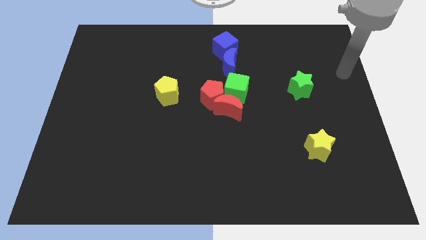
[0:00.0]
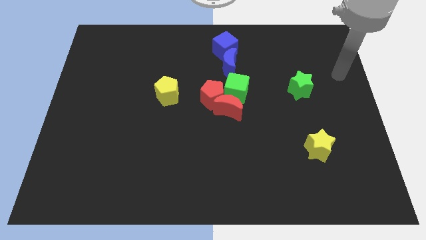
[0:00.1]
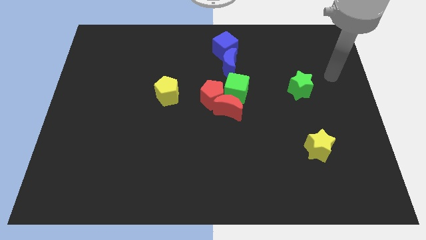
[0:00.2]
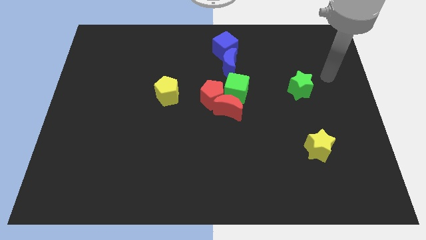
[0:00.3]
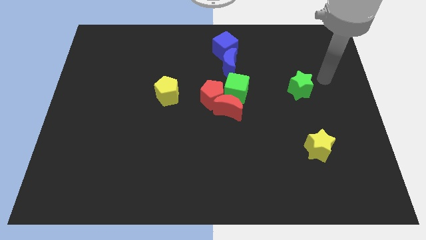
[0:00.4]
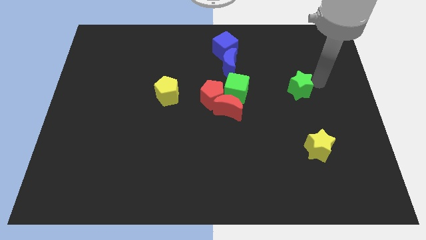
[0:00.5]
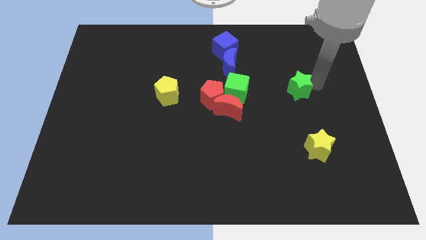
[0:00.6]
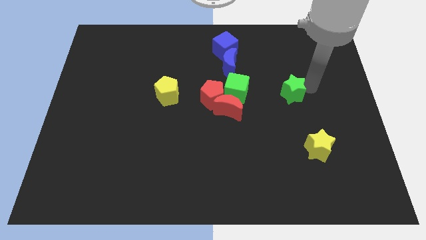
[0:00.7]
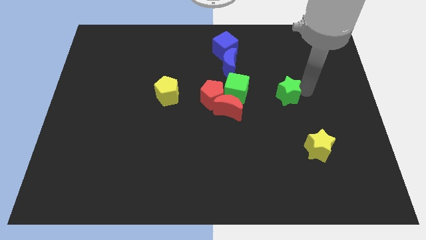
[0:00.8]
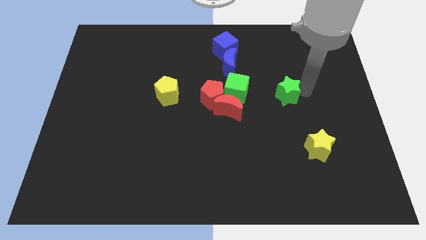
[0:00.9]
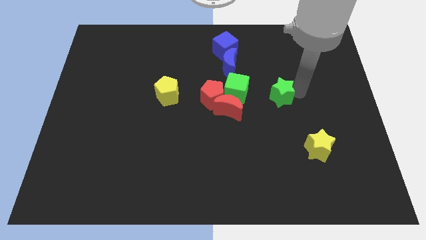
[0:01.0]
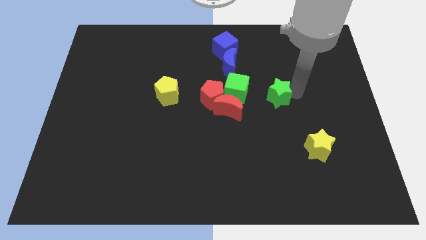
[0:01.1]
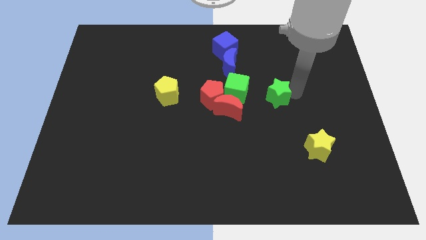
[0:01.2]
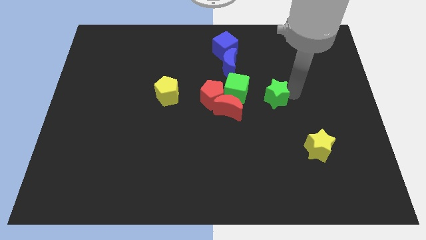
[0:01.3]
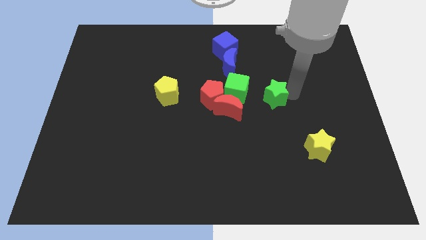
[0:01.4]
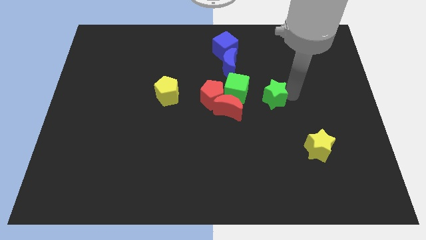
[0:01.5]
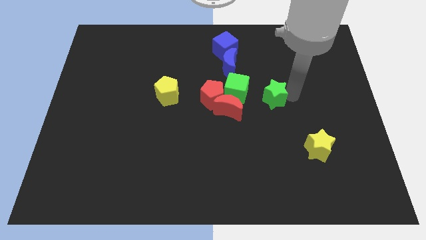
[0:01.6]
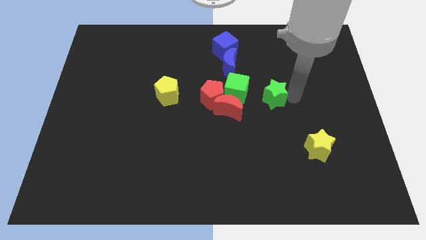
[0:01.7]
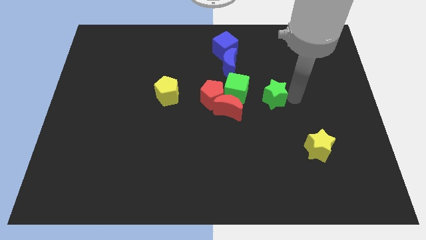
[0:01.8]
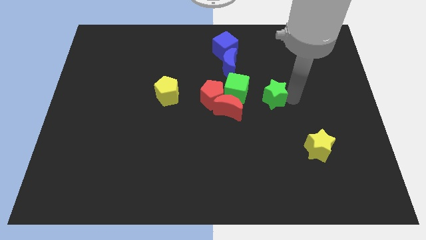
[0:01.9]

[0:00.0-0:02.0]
push the green star downwards diagonally to the left side

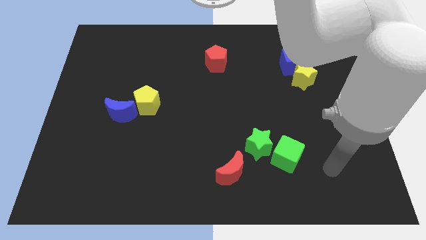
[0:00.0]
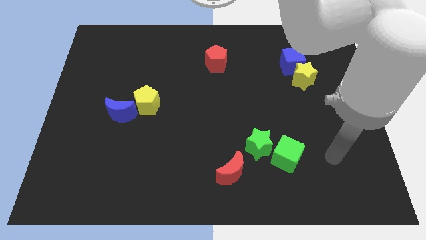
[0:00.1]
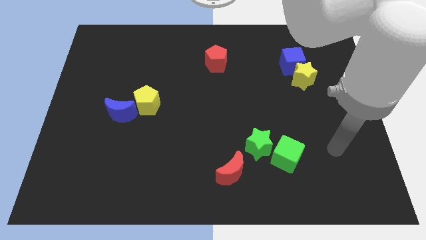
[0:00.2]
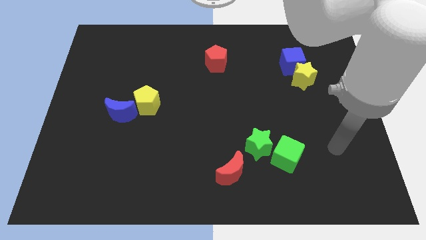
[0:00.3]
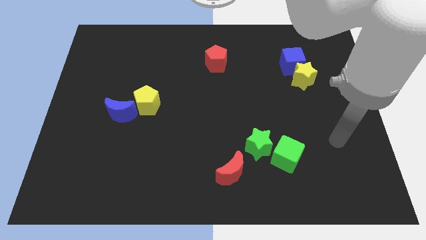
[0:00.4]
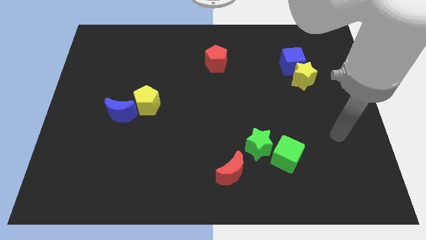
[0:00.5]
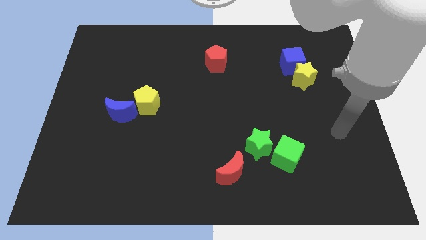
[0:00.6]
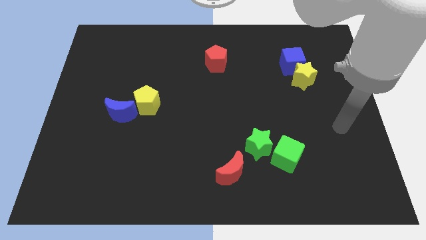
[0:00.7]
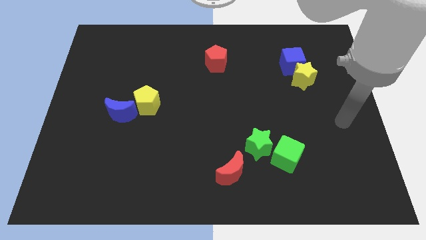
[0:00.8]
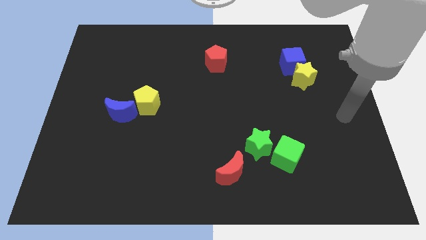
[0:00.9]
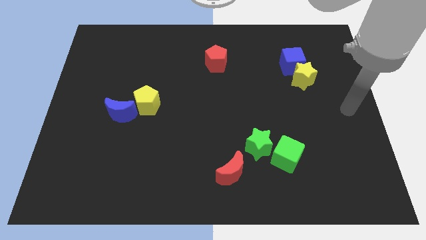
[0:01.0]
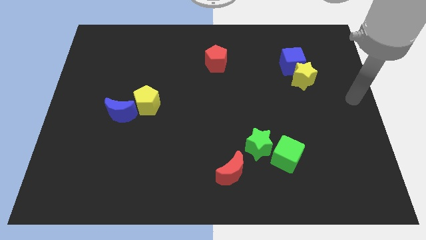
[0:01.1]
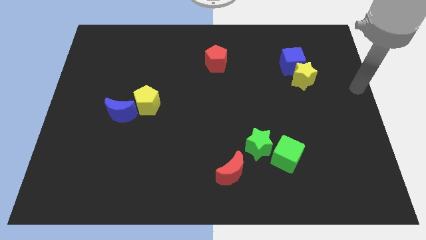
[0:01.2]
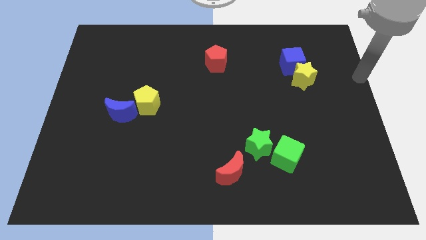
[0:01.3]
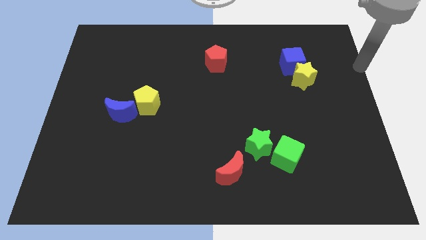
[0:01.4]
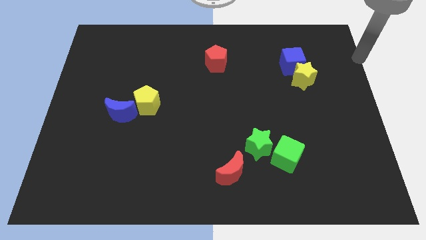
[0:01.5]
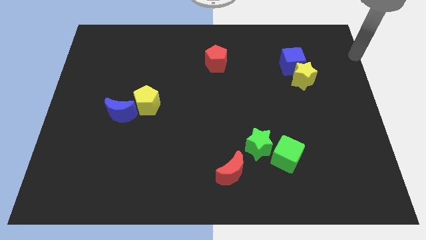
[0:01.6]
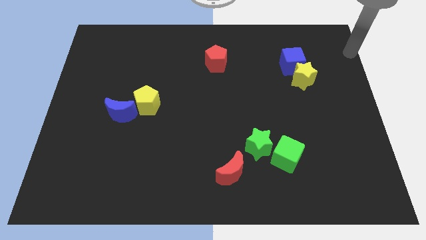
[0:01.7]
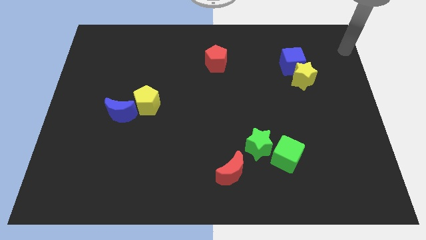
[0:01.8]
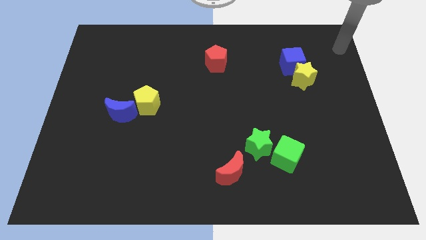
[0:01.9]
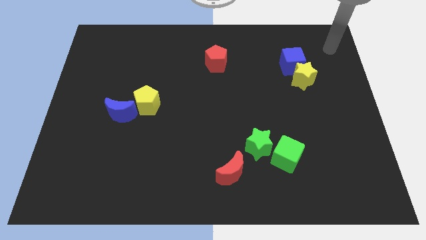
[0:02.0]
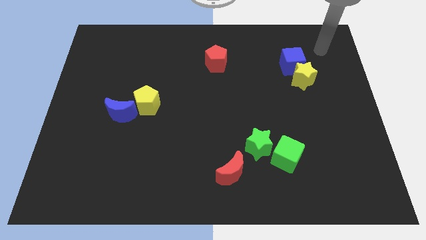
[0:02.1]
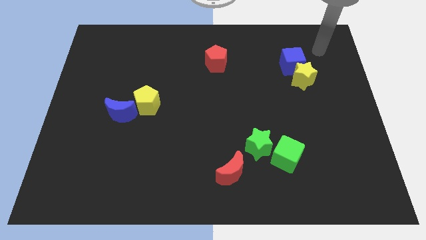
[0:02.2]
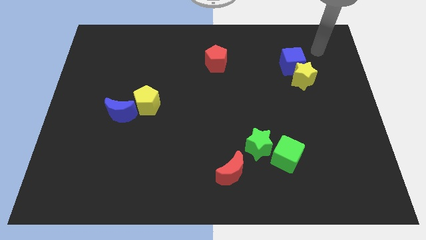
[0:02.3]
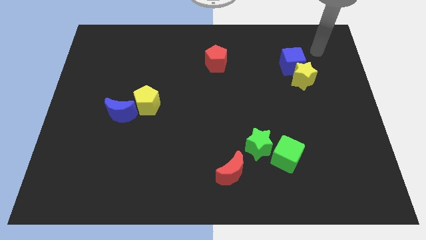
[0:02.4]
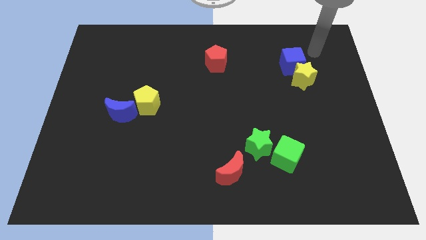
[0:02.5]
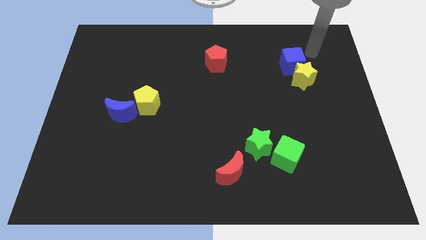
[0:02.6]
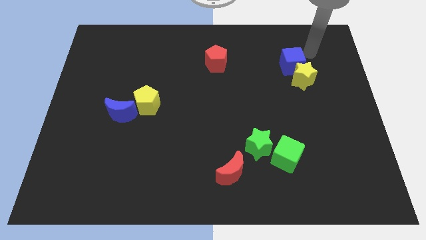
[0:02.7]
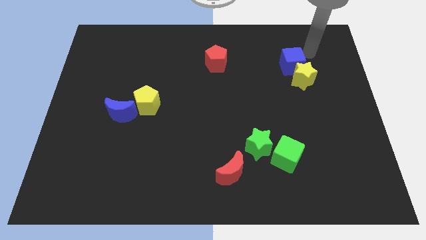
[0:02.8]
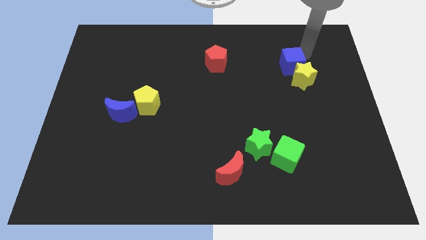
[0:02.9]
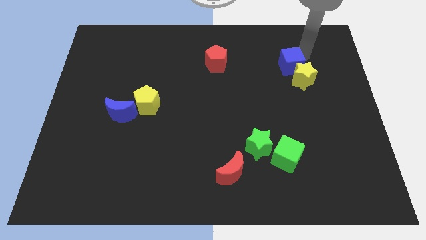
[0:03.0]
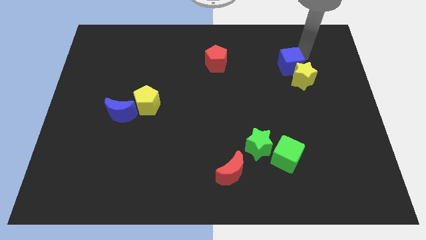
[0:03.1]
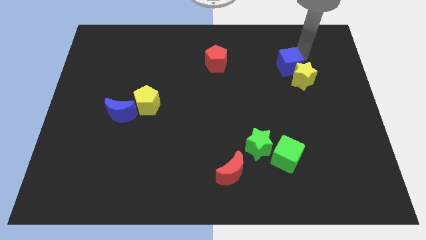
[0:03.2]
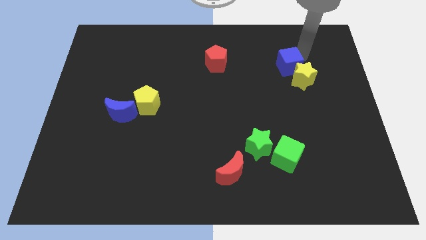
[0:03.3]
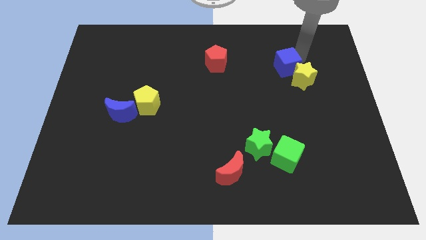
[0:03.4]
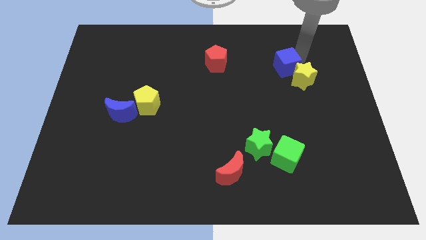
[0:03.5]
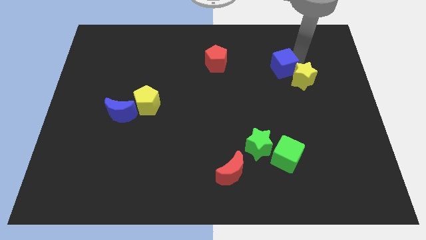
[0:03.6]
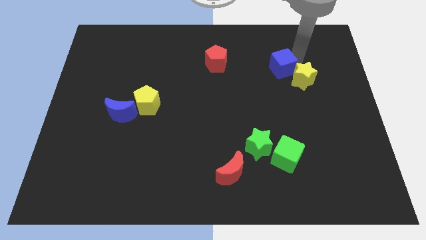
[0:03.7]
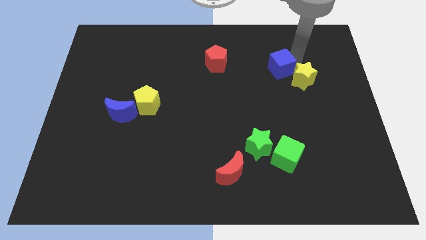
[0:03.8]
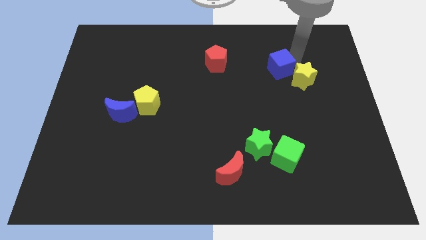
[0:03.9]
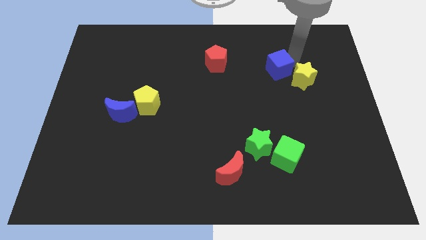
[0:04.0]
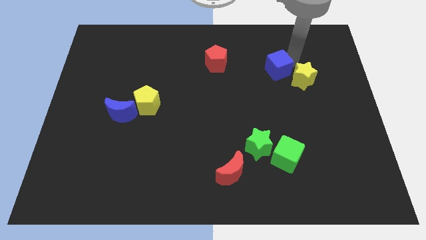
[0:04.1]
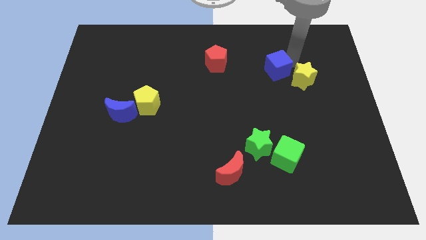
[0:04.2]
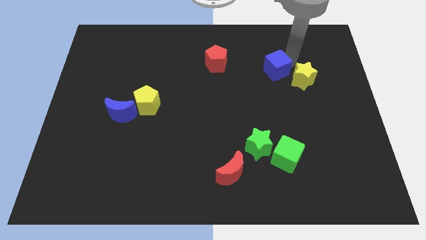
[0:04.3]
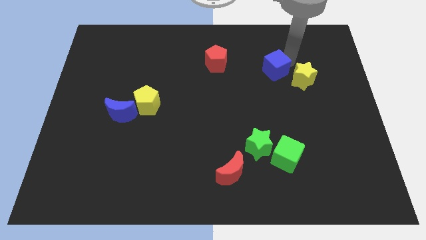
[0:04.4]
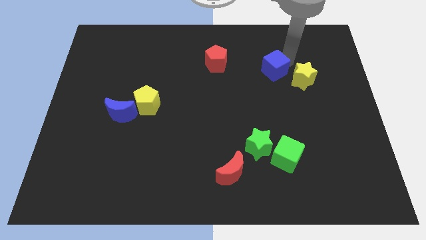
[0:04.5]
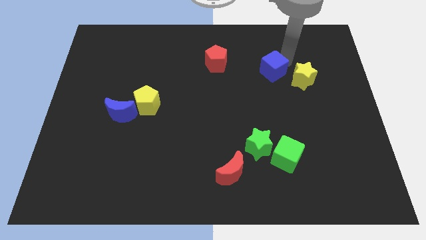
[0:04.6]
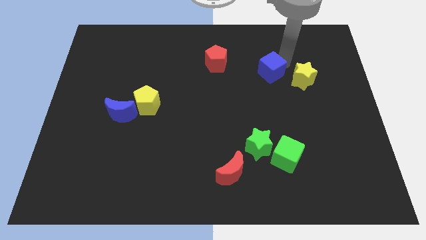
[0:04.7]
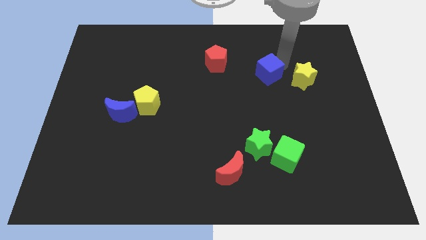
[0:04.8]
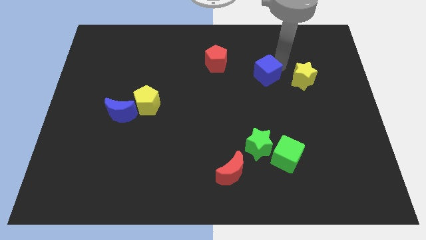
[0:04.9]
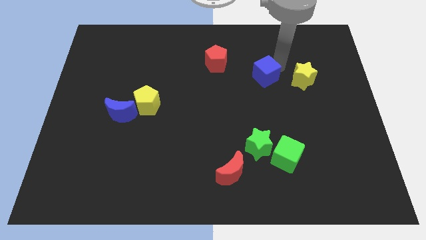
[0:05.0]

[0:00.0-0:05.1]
separate the blue cube from the yellow star

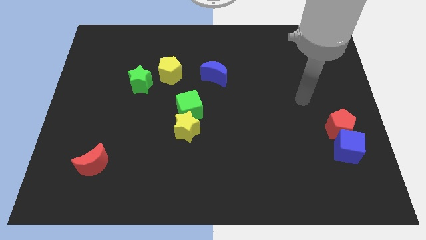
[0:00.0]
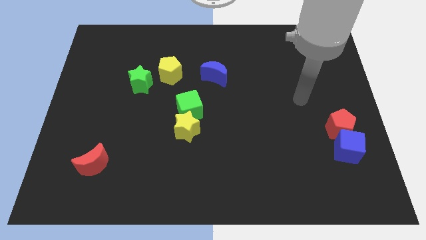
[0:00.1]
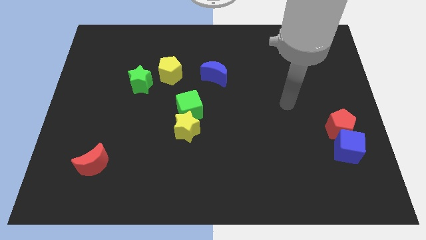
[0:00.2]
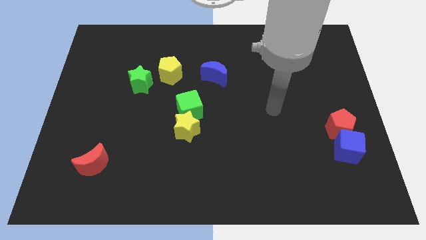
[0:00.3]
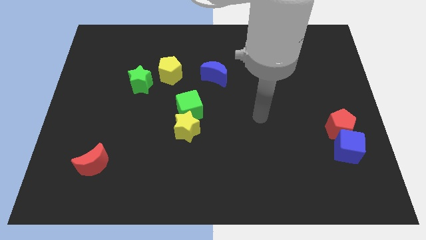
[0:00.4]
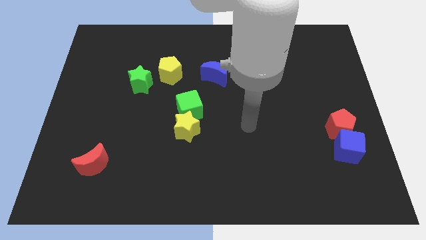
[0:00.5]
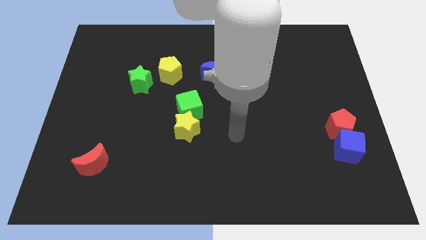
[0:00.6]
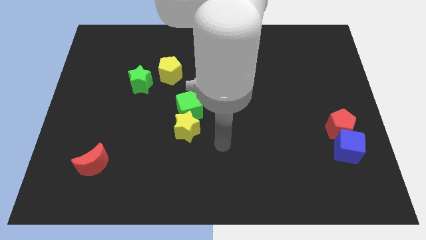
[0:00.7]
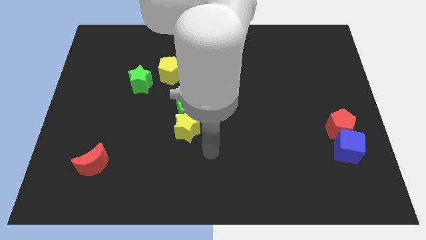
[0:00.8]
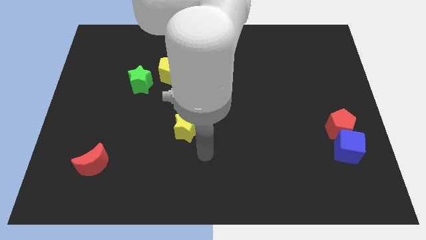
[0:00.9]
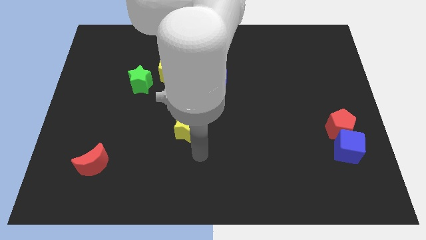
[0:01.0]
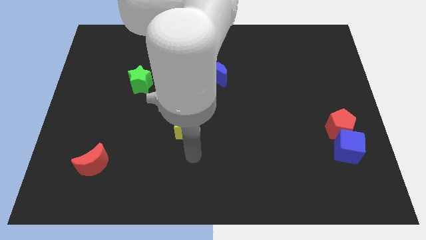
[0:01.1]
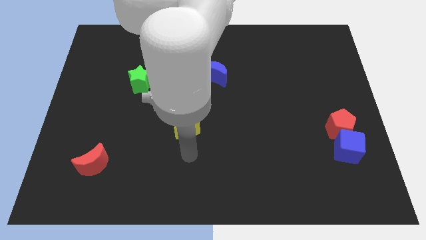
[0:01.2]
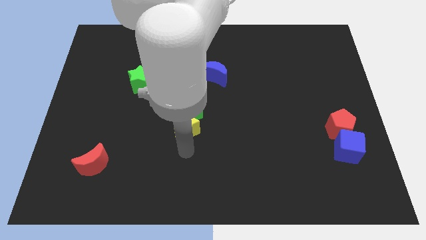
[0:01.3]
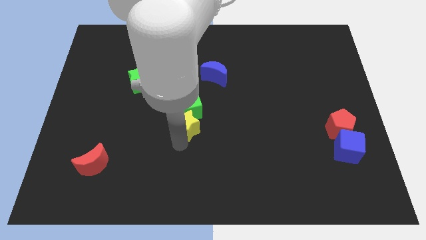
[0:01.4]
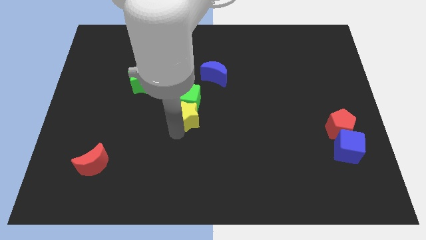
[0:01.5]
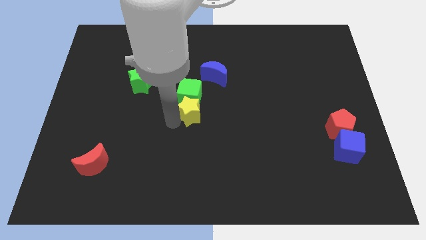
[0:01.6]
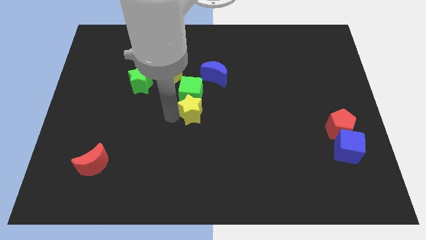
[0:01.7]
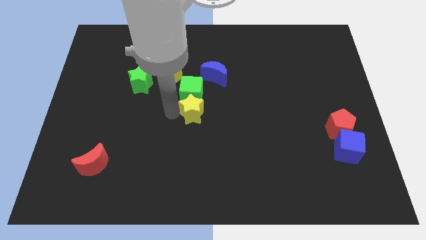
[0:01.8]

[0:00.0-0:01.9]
push the yellow star and the green cube slightly to the top

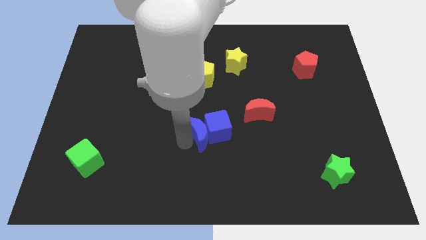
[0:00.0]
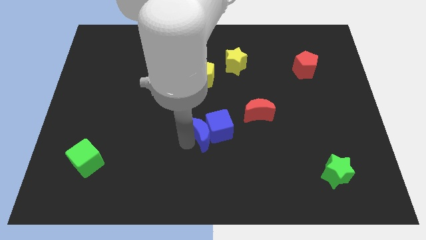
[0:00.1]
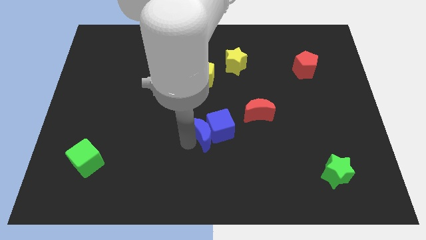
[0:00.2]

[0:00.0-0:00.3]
push the blue blocks toward the center
